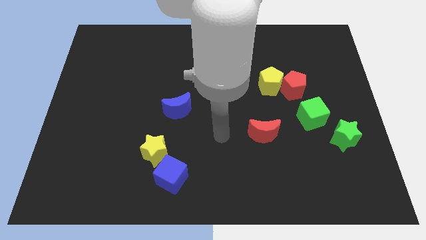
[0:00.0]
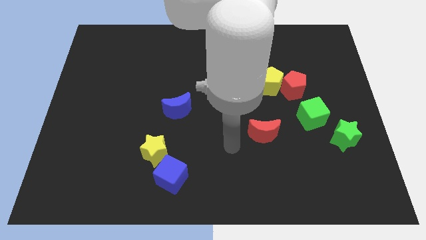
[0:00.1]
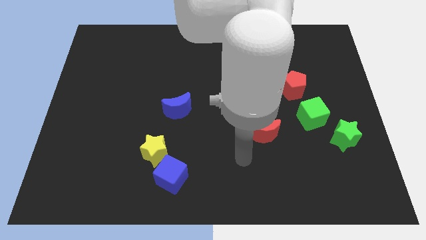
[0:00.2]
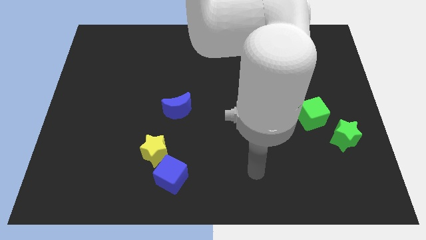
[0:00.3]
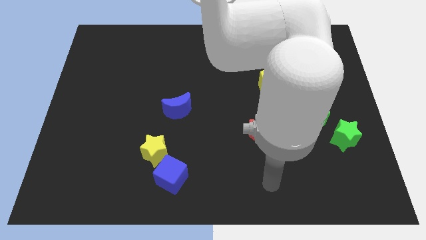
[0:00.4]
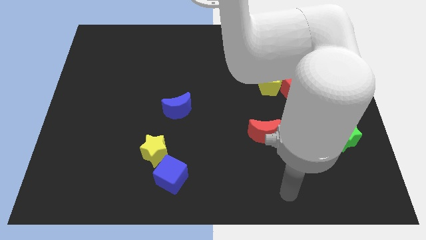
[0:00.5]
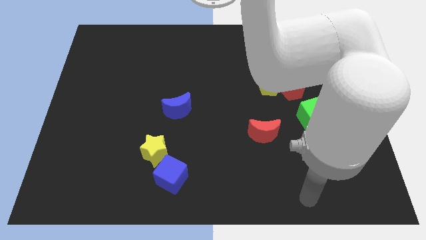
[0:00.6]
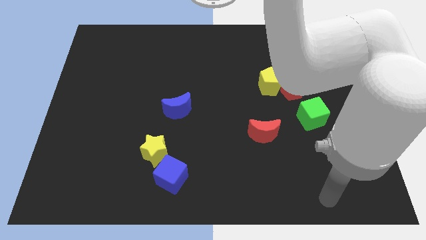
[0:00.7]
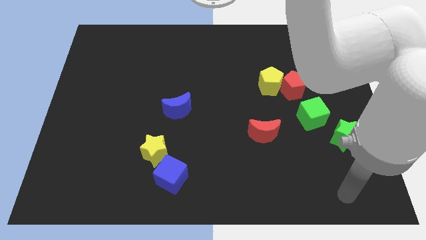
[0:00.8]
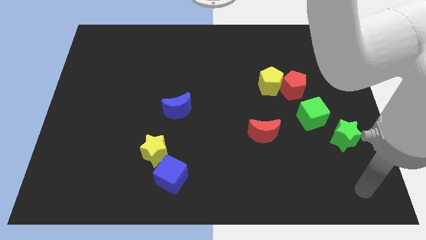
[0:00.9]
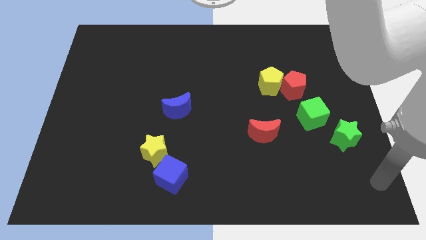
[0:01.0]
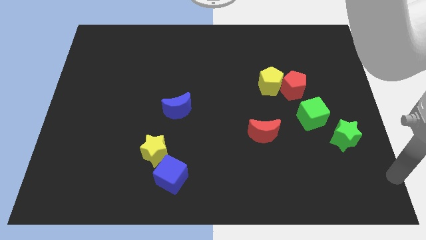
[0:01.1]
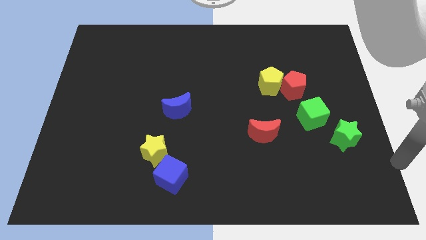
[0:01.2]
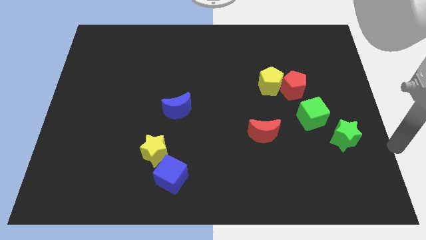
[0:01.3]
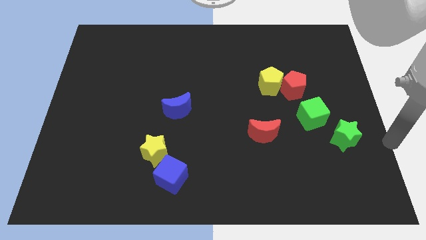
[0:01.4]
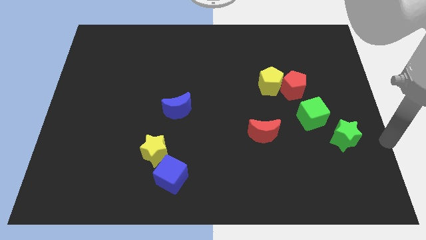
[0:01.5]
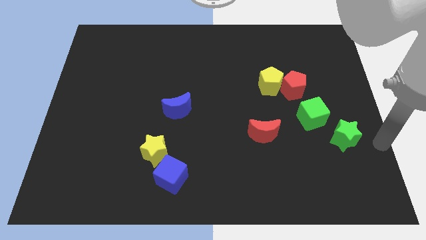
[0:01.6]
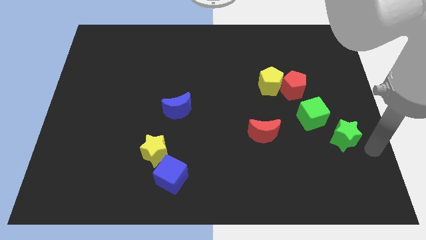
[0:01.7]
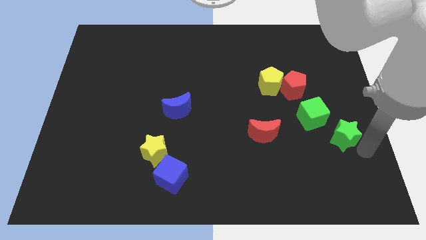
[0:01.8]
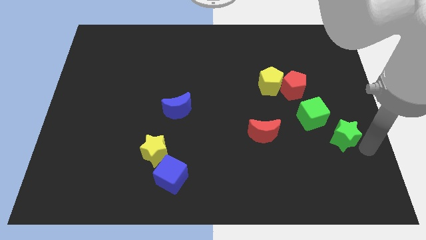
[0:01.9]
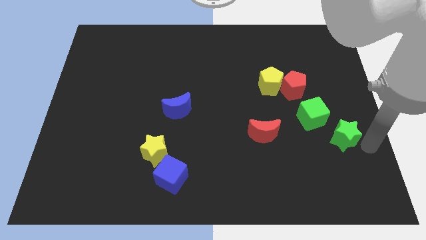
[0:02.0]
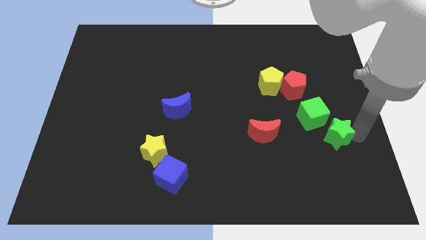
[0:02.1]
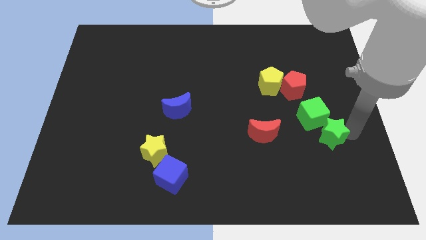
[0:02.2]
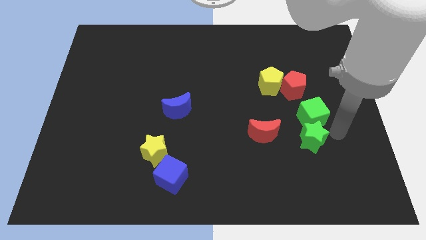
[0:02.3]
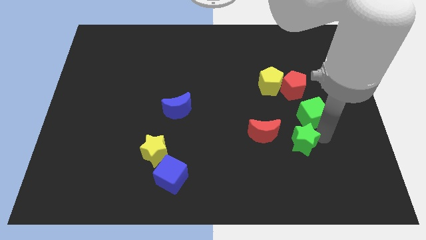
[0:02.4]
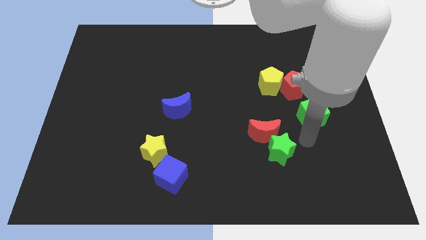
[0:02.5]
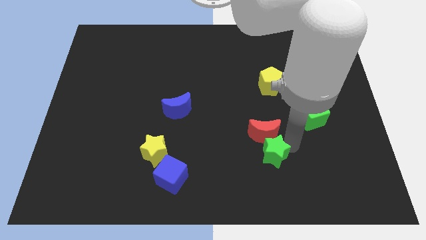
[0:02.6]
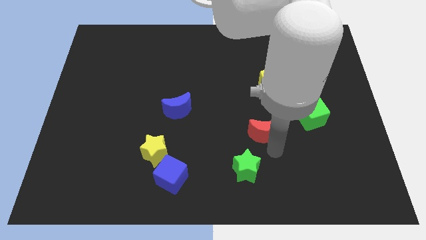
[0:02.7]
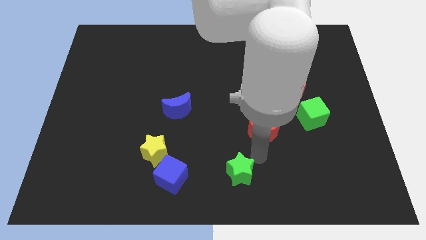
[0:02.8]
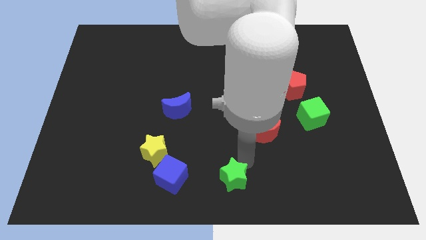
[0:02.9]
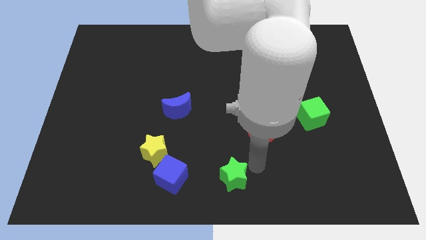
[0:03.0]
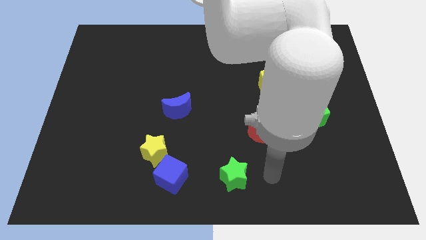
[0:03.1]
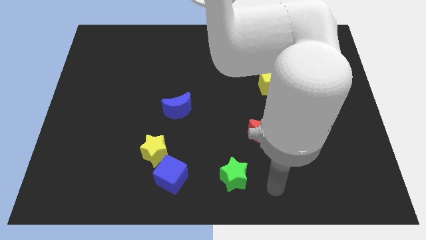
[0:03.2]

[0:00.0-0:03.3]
move the green star to the center of the bottom

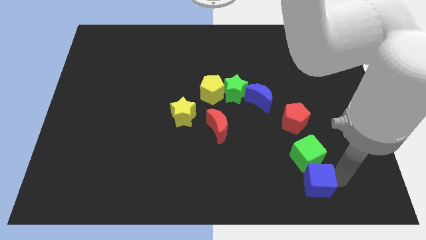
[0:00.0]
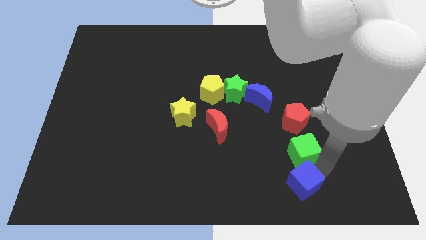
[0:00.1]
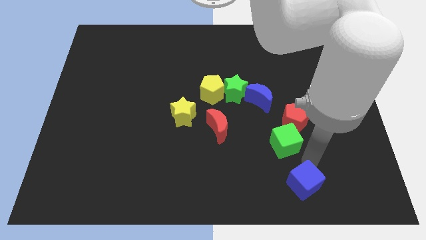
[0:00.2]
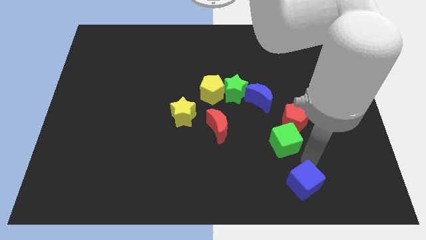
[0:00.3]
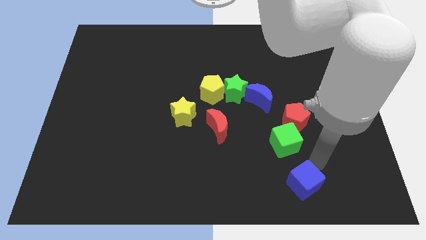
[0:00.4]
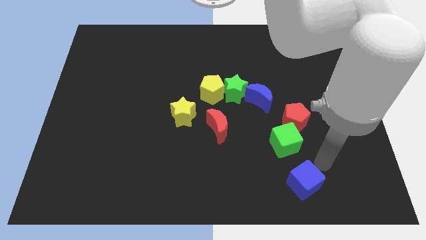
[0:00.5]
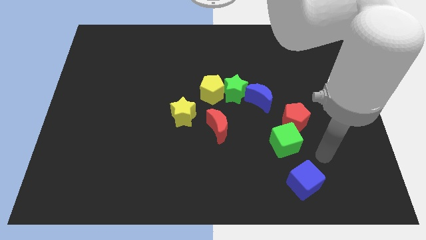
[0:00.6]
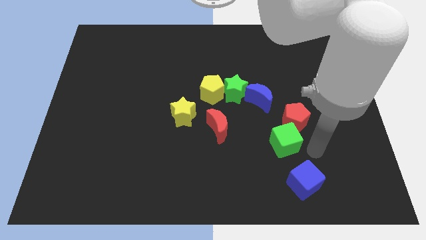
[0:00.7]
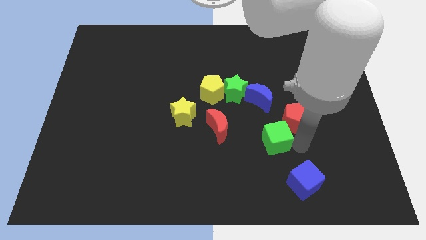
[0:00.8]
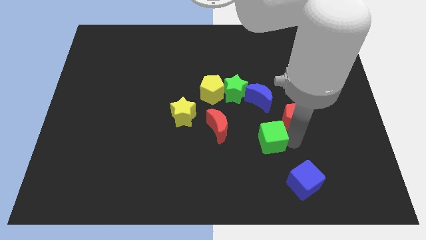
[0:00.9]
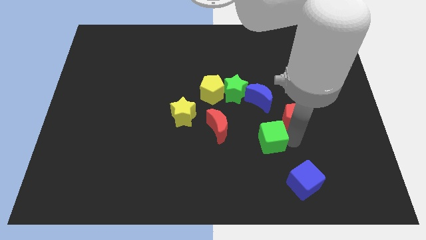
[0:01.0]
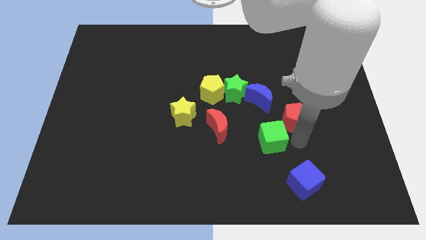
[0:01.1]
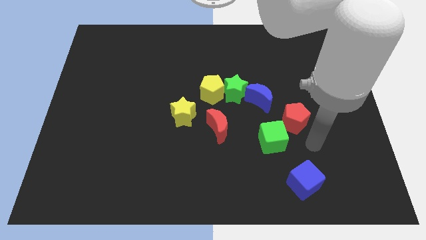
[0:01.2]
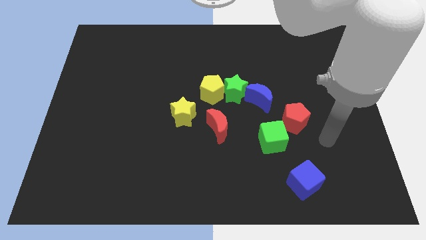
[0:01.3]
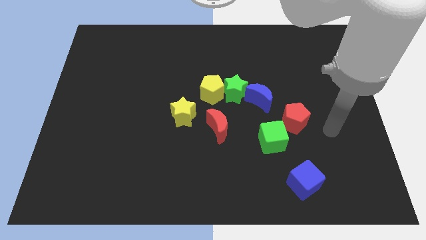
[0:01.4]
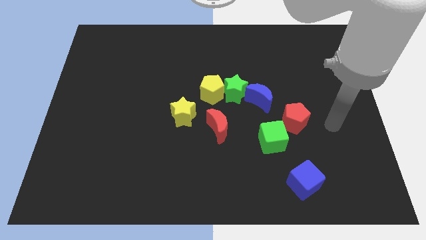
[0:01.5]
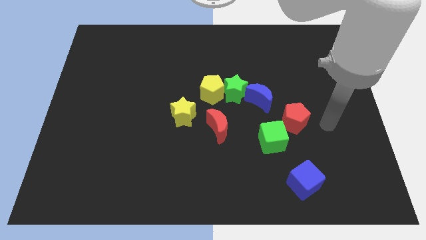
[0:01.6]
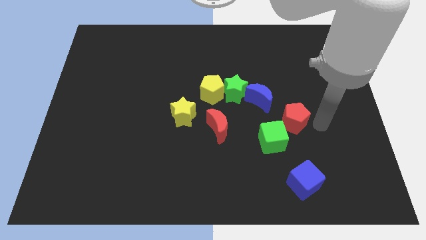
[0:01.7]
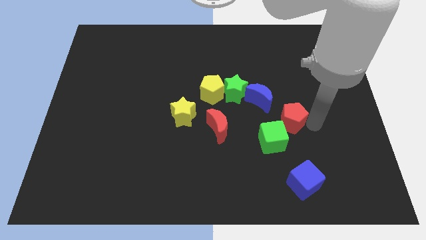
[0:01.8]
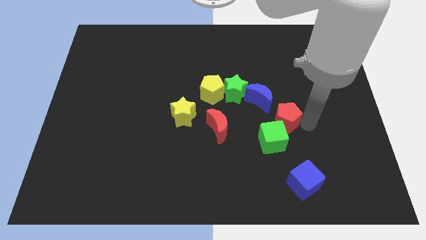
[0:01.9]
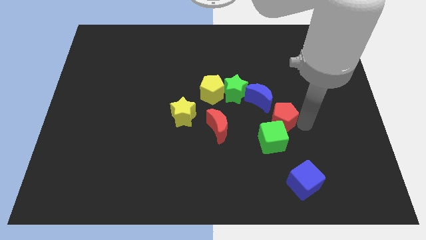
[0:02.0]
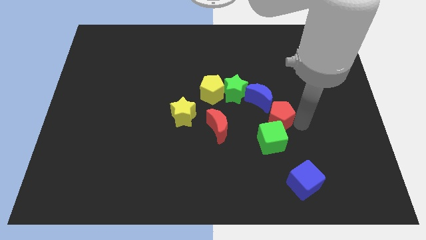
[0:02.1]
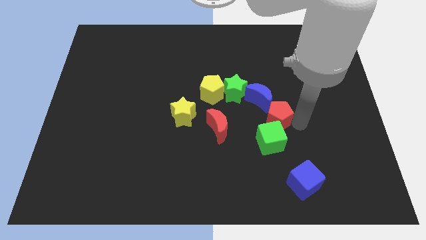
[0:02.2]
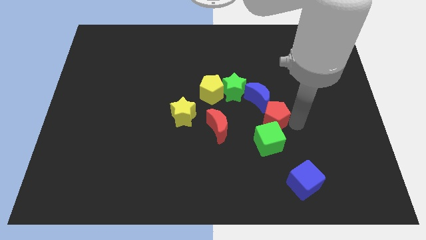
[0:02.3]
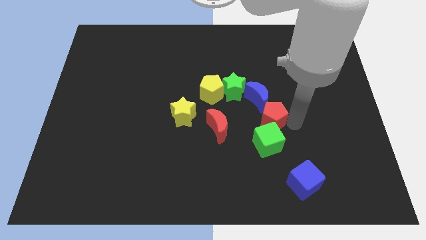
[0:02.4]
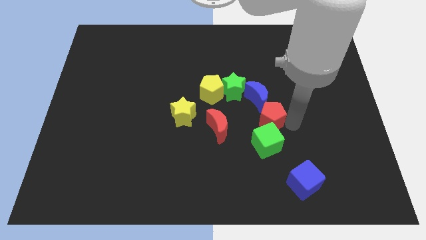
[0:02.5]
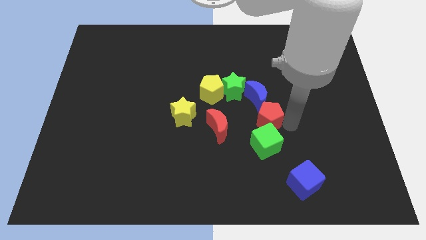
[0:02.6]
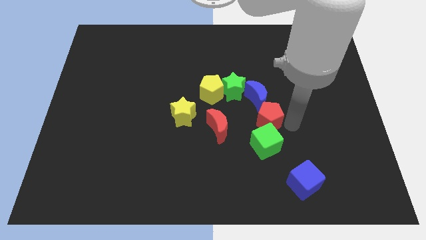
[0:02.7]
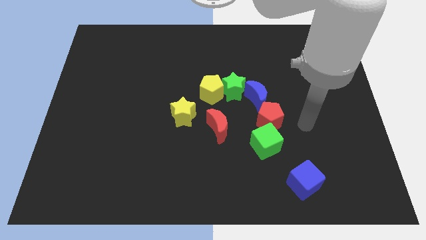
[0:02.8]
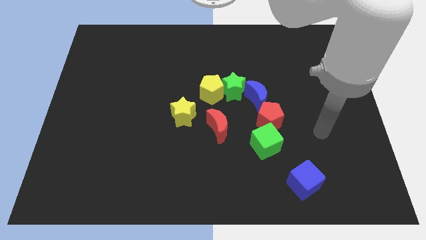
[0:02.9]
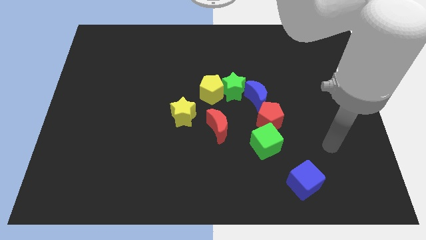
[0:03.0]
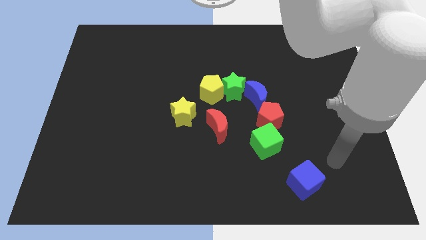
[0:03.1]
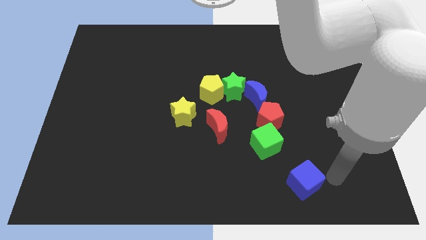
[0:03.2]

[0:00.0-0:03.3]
move red pentagon in between blue crescent and green cube

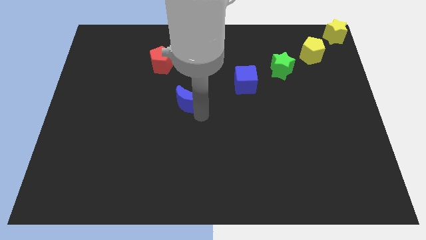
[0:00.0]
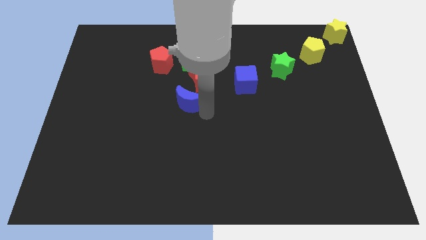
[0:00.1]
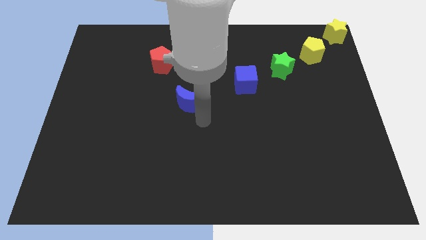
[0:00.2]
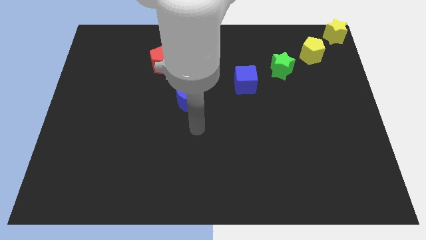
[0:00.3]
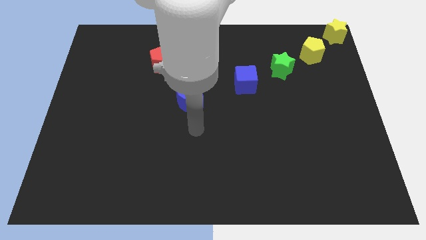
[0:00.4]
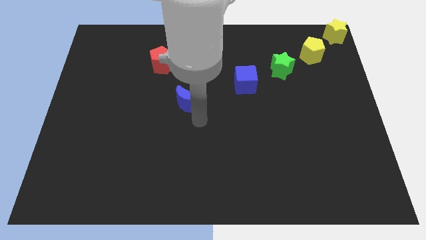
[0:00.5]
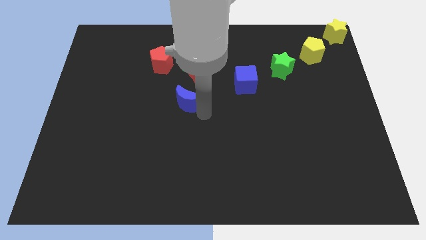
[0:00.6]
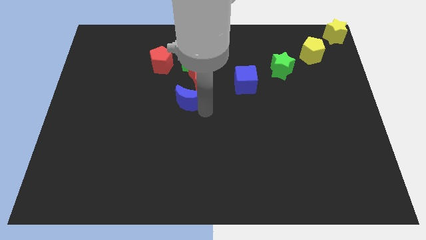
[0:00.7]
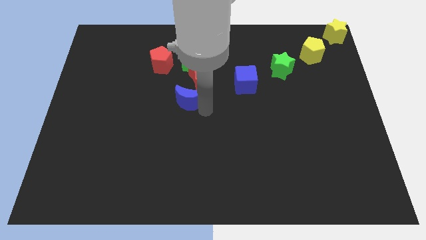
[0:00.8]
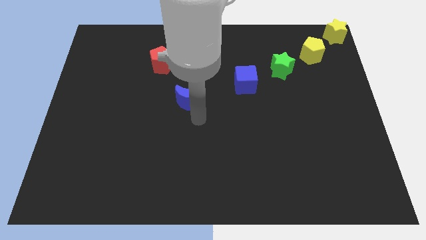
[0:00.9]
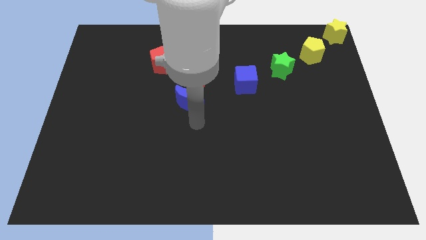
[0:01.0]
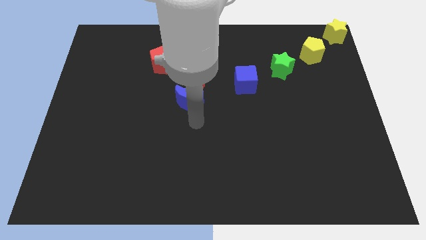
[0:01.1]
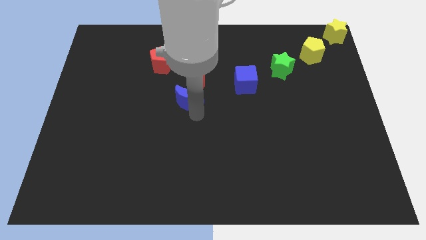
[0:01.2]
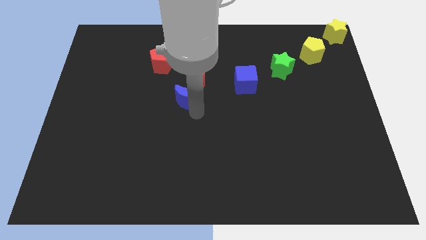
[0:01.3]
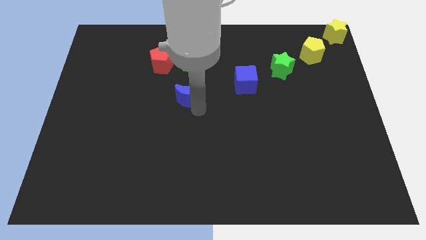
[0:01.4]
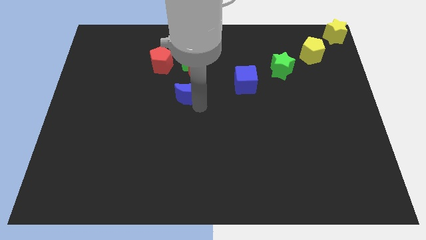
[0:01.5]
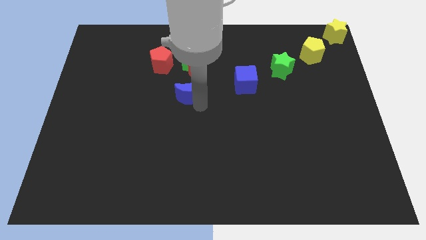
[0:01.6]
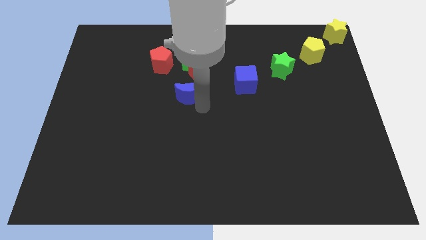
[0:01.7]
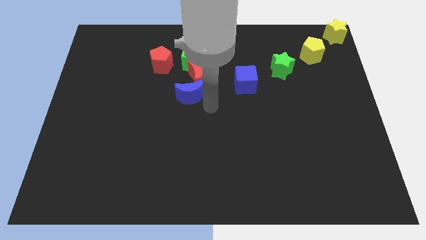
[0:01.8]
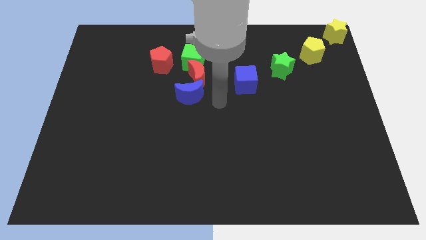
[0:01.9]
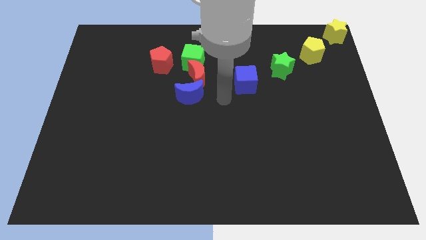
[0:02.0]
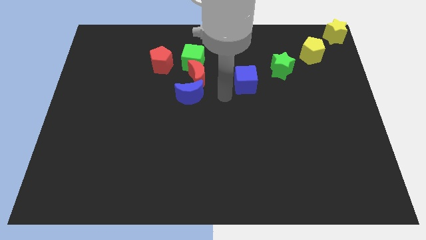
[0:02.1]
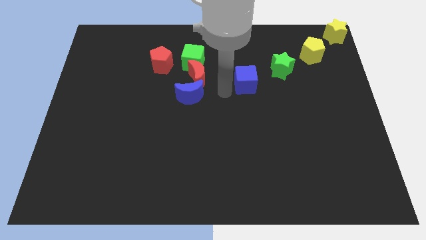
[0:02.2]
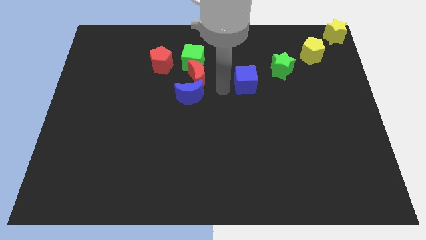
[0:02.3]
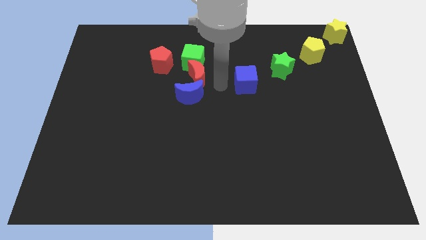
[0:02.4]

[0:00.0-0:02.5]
move the blue moon into the red moon

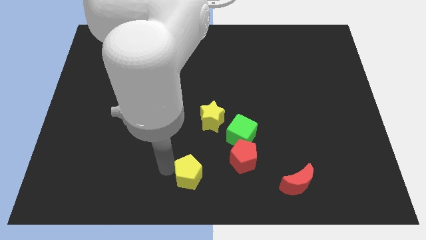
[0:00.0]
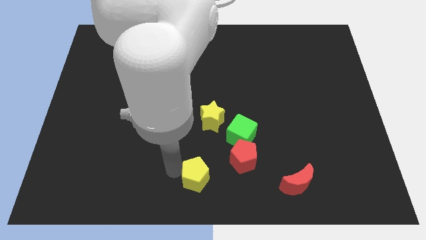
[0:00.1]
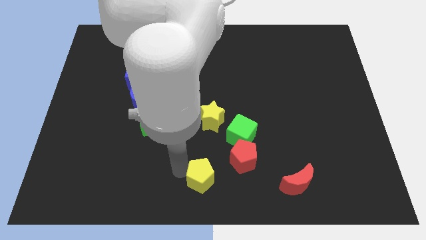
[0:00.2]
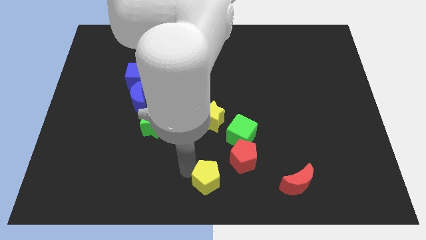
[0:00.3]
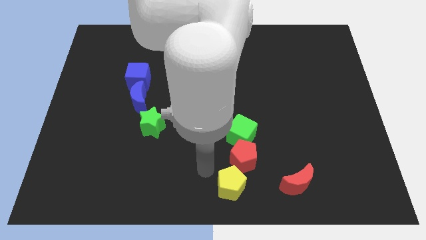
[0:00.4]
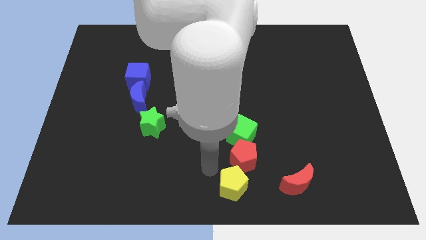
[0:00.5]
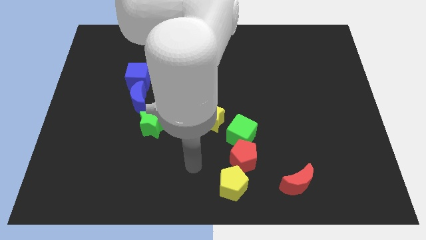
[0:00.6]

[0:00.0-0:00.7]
place the yellow pentagon below the red pentagon
